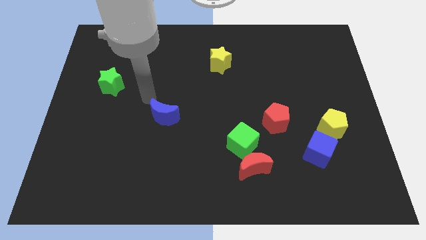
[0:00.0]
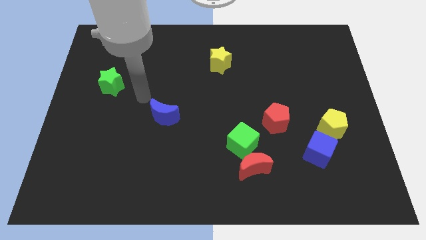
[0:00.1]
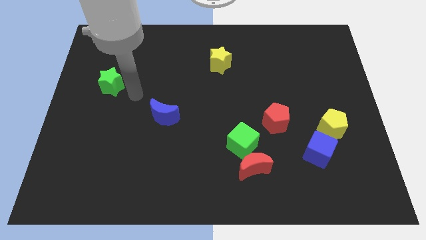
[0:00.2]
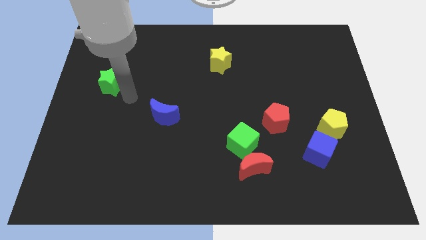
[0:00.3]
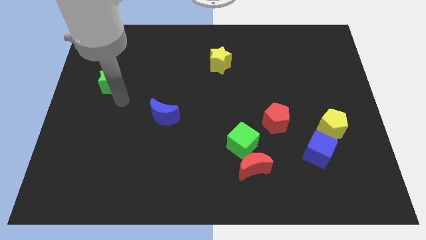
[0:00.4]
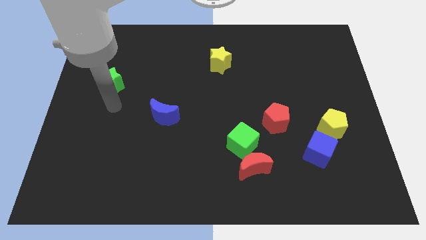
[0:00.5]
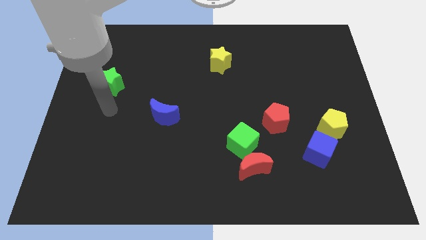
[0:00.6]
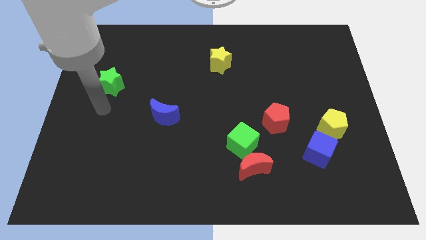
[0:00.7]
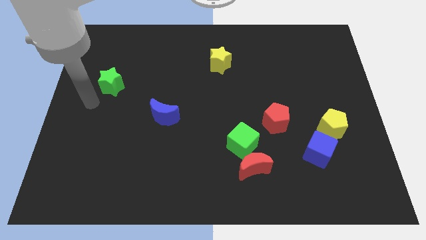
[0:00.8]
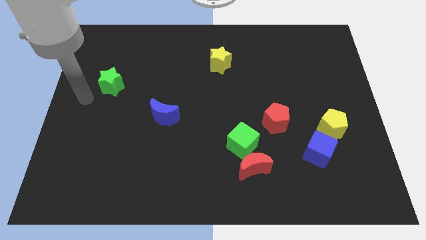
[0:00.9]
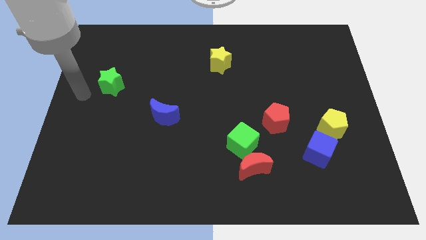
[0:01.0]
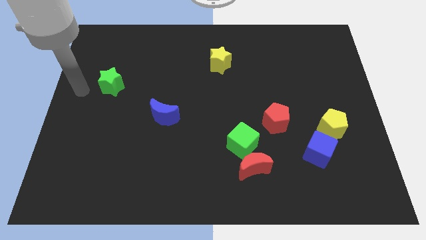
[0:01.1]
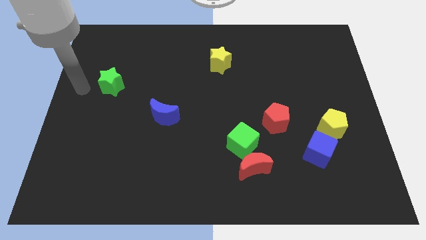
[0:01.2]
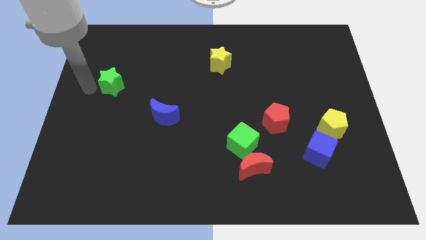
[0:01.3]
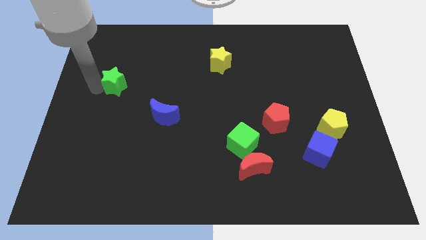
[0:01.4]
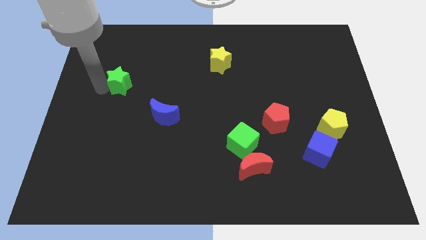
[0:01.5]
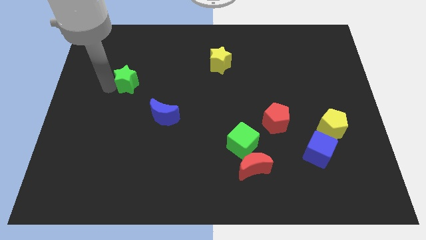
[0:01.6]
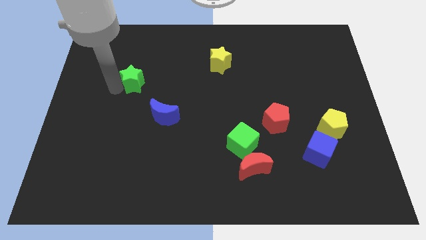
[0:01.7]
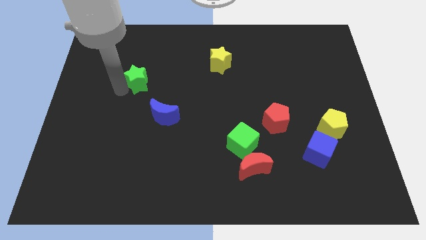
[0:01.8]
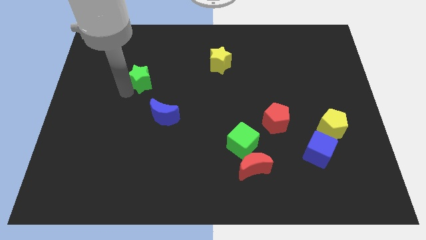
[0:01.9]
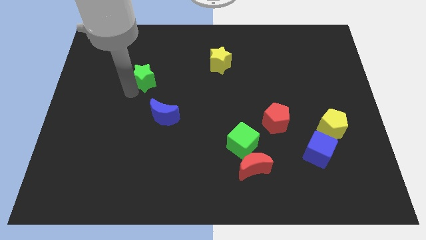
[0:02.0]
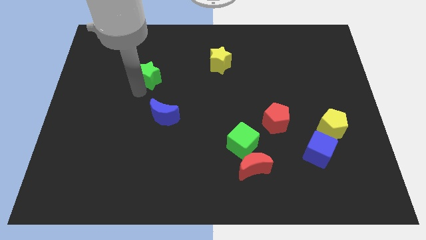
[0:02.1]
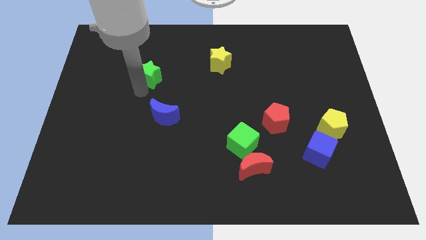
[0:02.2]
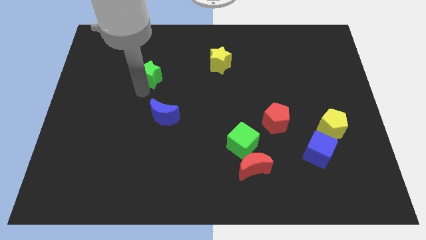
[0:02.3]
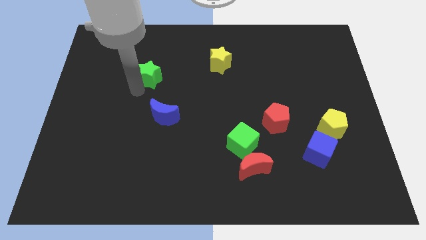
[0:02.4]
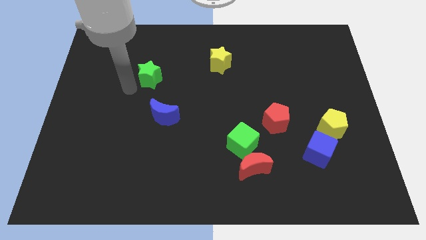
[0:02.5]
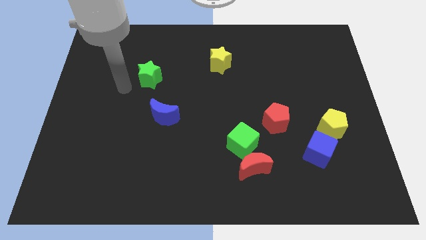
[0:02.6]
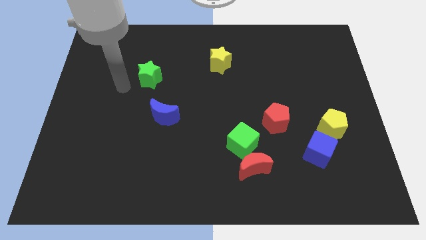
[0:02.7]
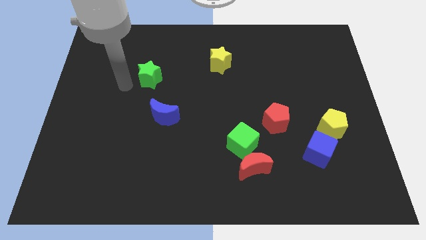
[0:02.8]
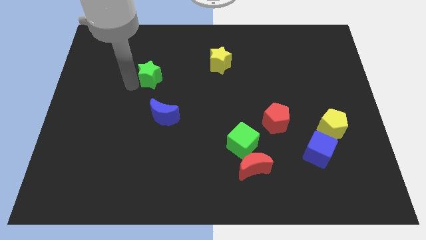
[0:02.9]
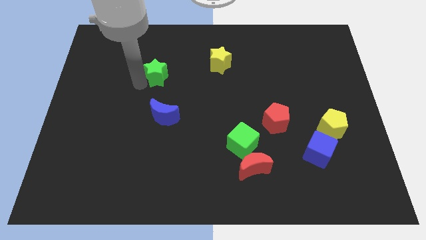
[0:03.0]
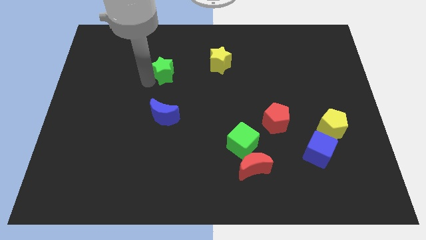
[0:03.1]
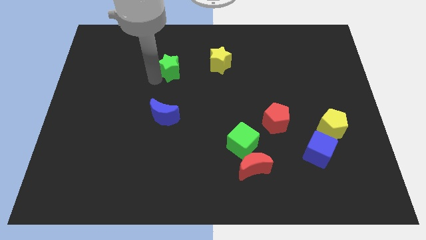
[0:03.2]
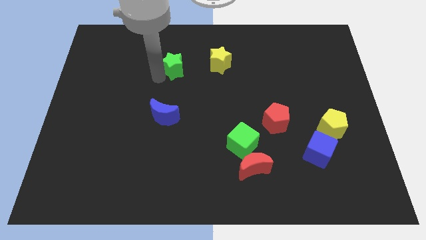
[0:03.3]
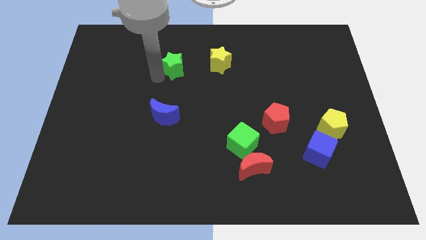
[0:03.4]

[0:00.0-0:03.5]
move the green star to the top of the blue crescent

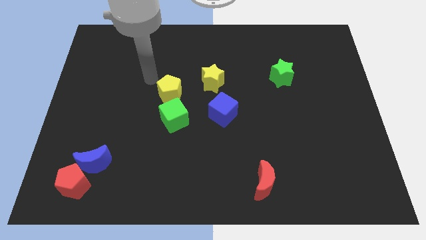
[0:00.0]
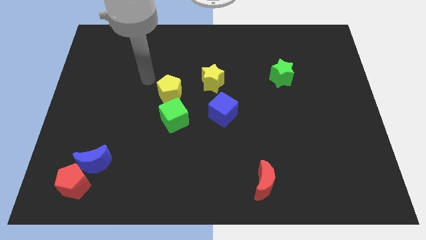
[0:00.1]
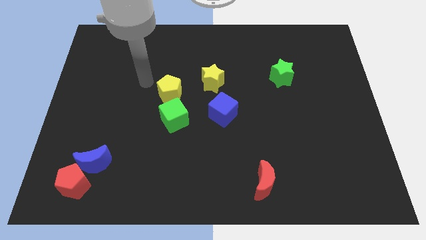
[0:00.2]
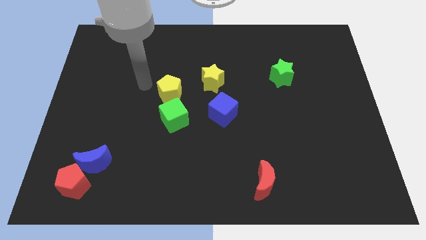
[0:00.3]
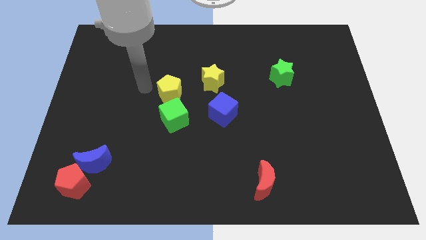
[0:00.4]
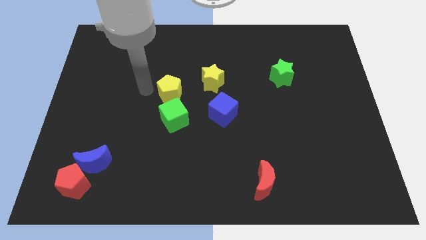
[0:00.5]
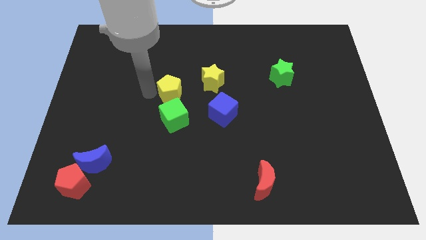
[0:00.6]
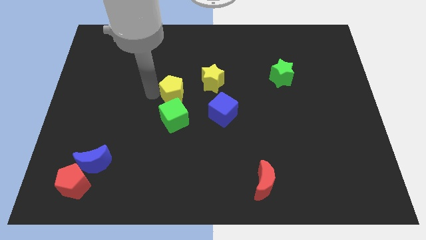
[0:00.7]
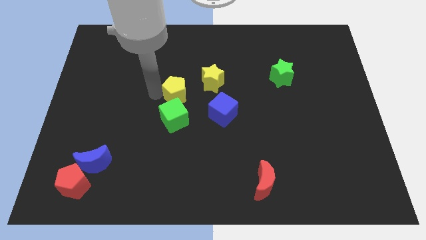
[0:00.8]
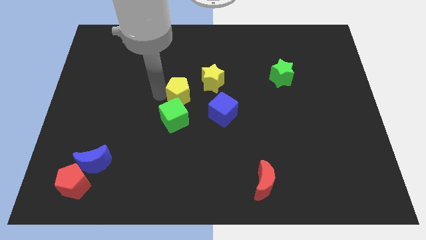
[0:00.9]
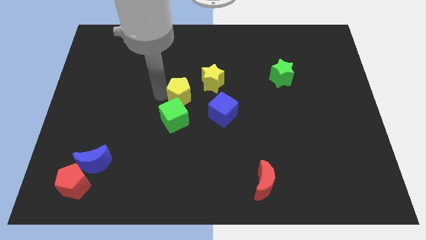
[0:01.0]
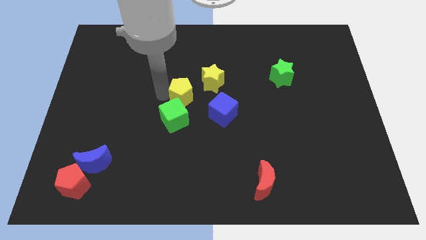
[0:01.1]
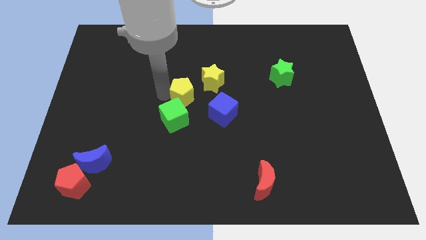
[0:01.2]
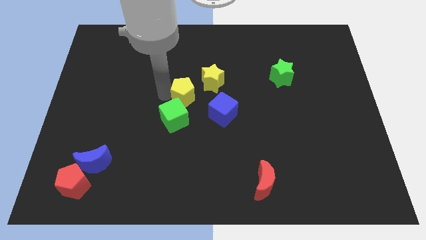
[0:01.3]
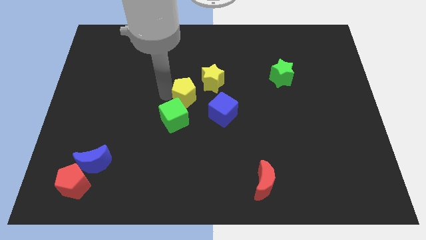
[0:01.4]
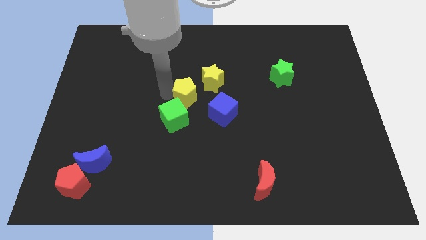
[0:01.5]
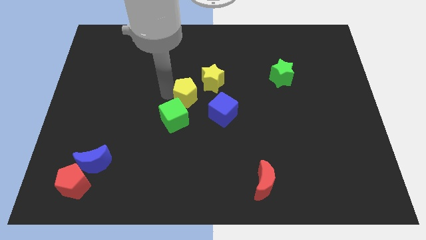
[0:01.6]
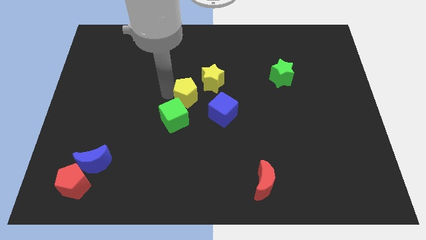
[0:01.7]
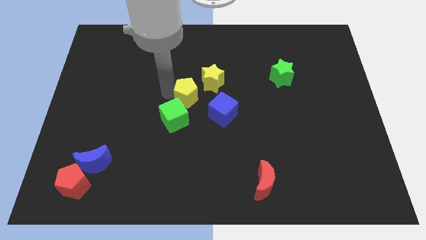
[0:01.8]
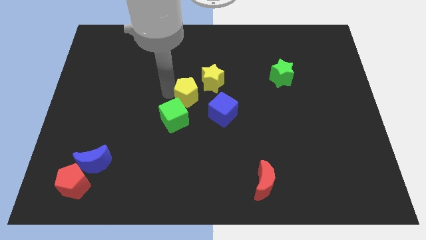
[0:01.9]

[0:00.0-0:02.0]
push the yellow pentagon bottom left of the yellow star

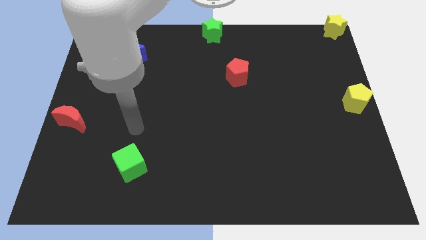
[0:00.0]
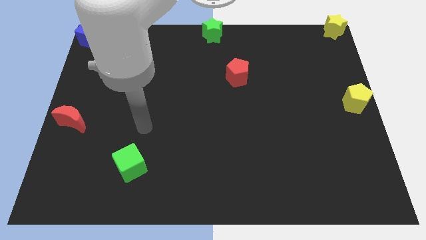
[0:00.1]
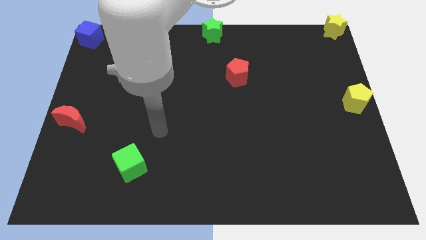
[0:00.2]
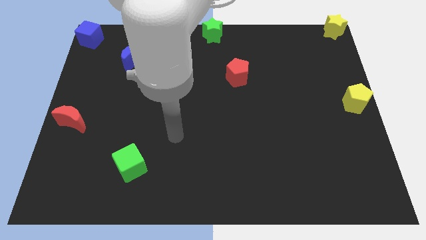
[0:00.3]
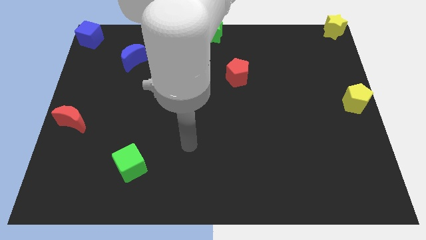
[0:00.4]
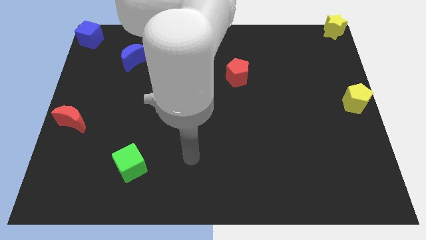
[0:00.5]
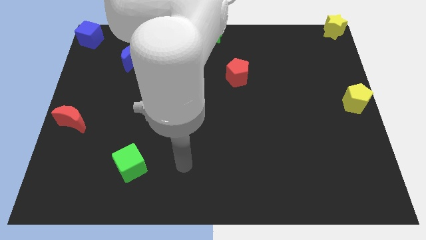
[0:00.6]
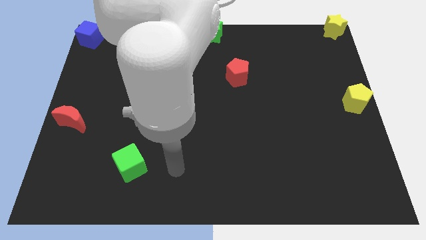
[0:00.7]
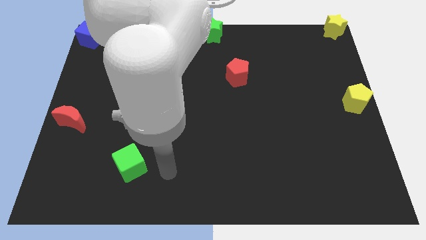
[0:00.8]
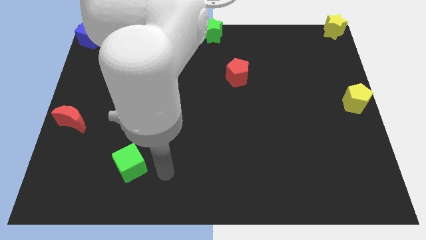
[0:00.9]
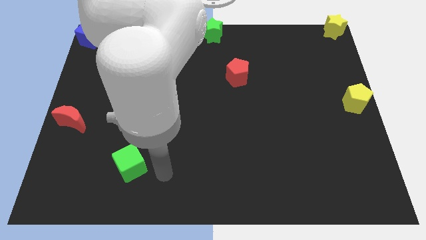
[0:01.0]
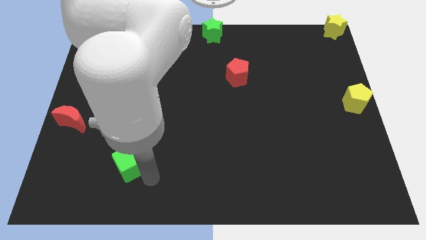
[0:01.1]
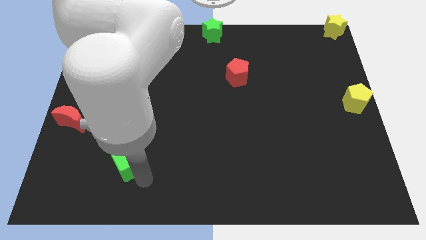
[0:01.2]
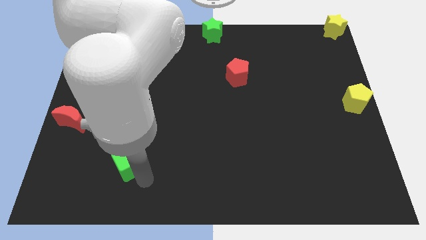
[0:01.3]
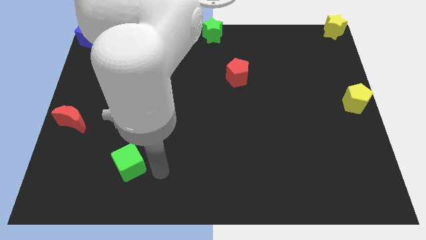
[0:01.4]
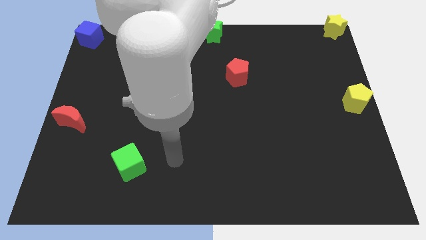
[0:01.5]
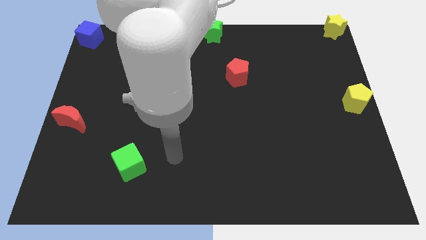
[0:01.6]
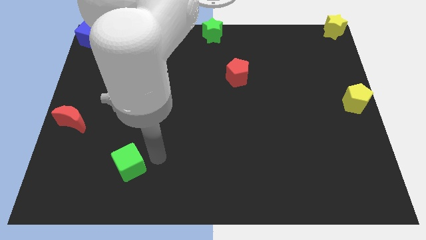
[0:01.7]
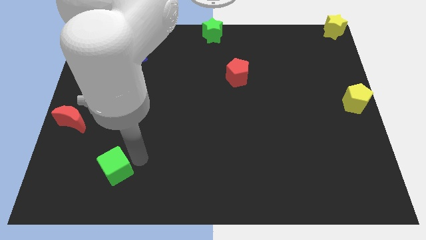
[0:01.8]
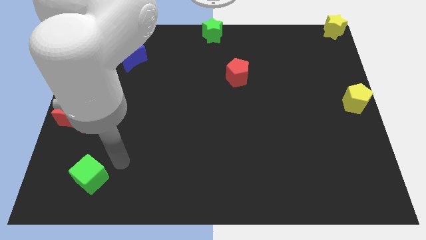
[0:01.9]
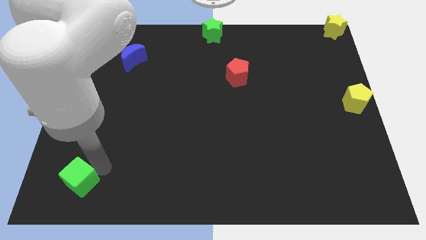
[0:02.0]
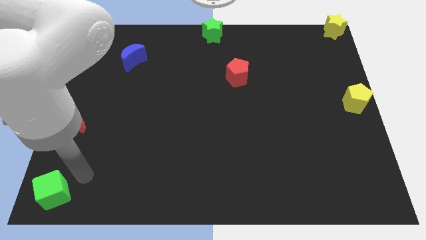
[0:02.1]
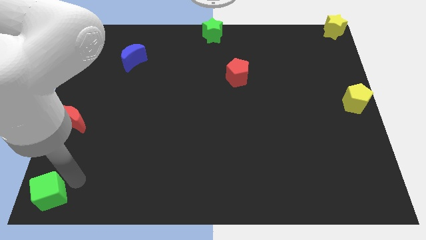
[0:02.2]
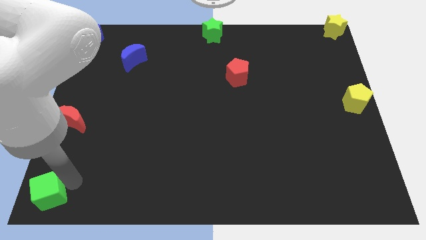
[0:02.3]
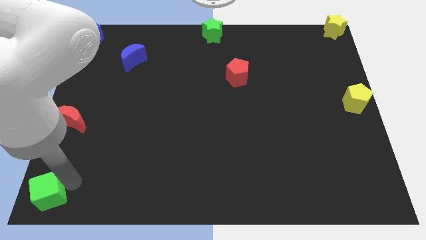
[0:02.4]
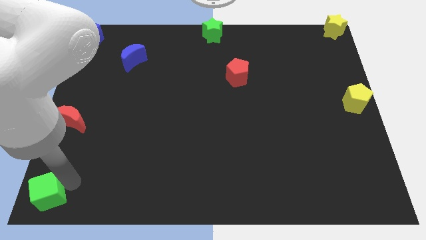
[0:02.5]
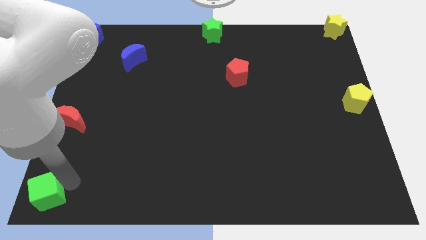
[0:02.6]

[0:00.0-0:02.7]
push the green star to the bottom left to the board

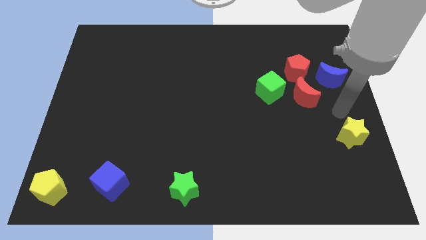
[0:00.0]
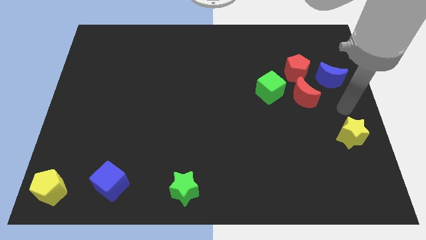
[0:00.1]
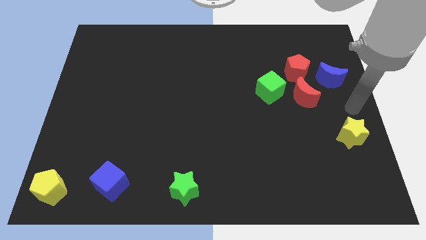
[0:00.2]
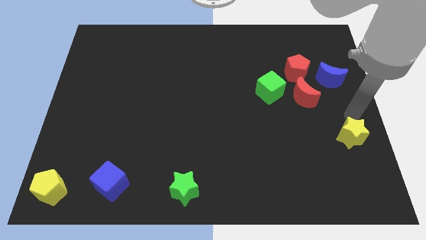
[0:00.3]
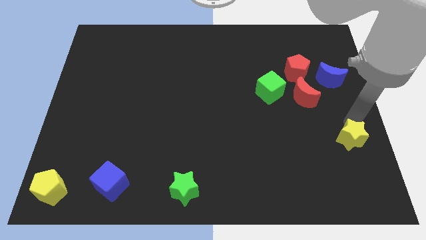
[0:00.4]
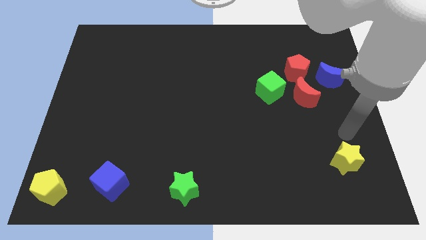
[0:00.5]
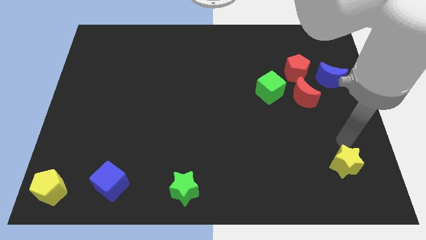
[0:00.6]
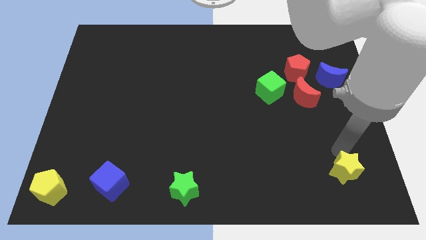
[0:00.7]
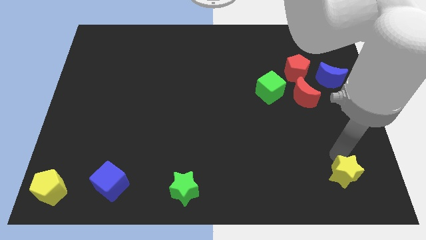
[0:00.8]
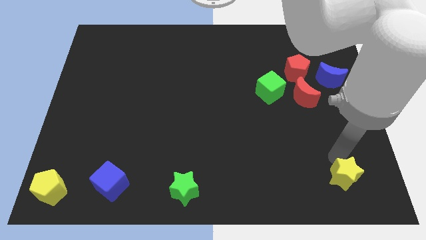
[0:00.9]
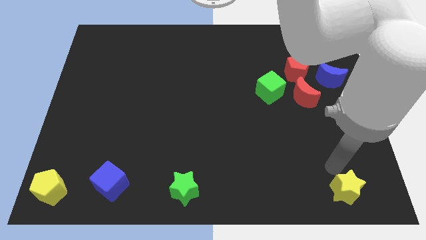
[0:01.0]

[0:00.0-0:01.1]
push yellow star towards bottom right
